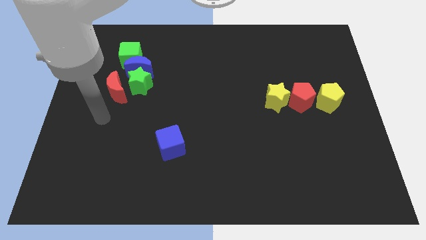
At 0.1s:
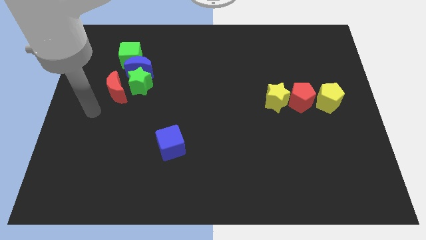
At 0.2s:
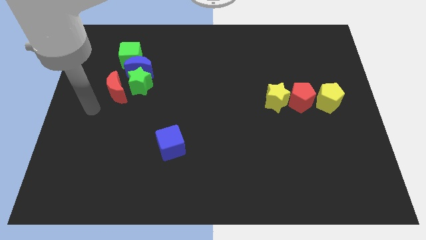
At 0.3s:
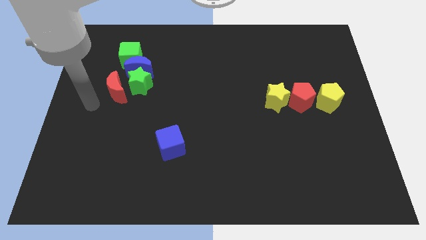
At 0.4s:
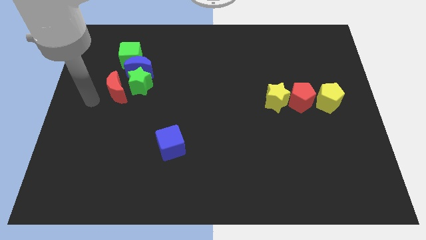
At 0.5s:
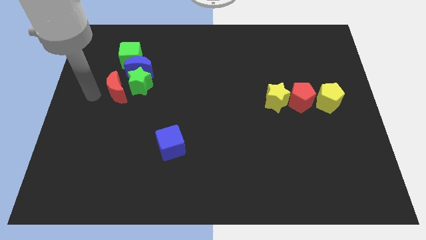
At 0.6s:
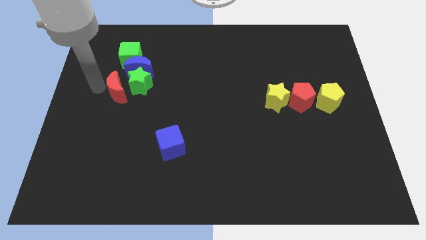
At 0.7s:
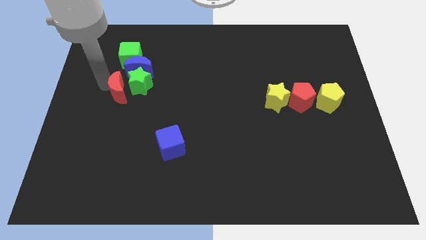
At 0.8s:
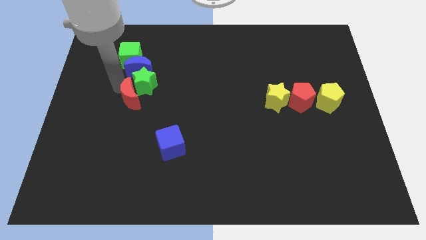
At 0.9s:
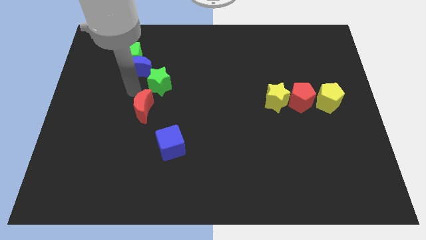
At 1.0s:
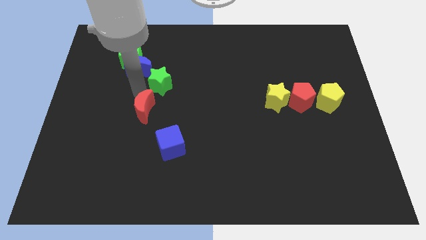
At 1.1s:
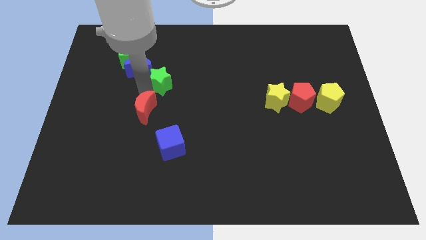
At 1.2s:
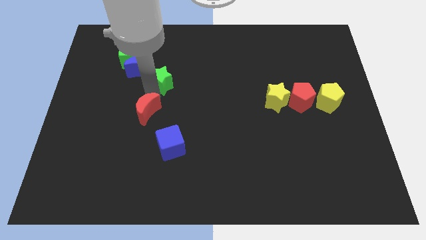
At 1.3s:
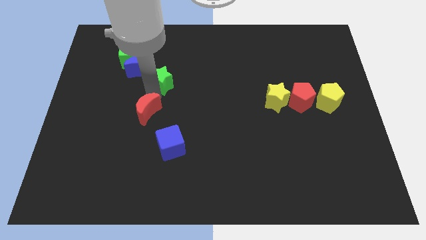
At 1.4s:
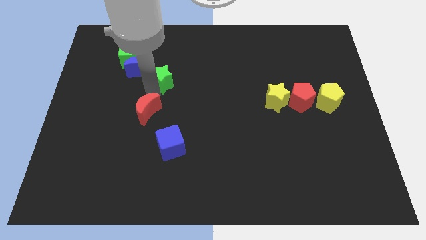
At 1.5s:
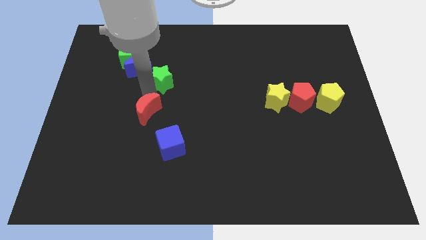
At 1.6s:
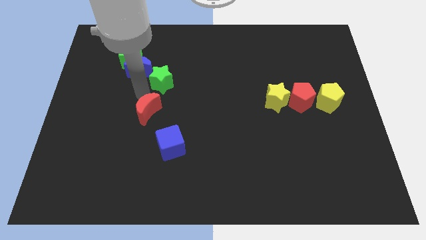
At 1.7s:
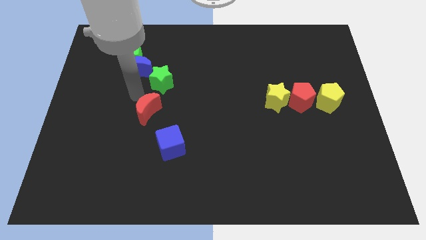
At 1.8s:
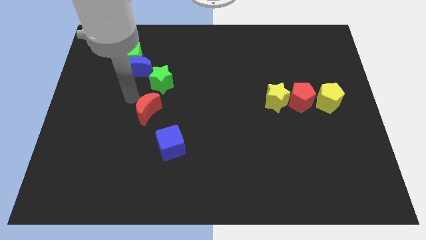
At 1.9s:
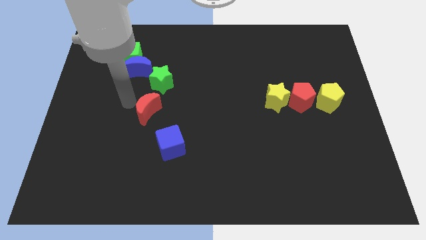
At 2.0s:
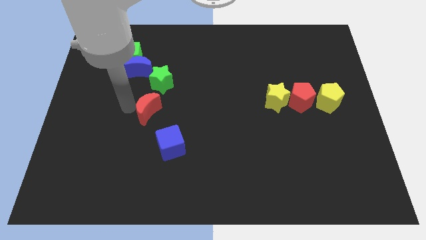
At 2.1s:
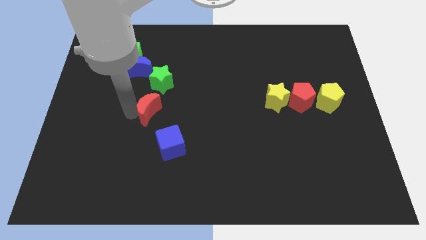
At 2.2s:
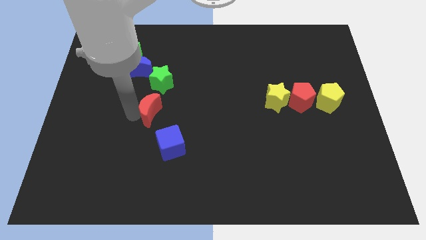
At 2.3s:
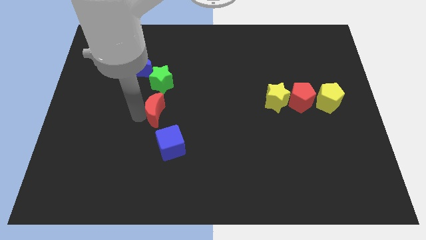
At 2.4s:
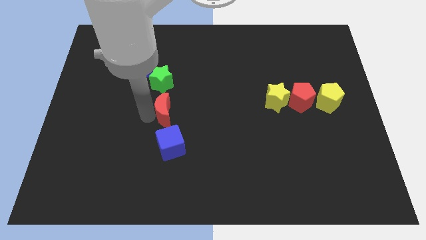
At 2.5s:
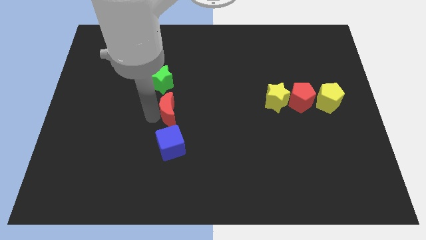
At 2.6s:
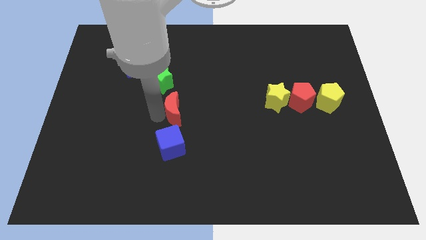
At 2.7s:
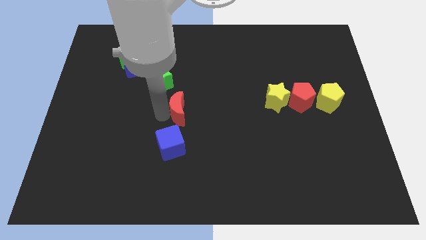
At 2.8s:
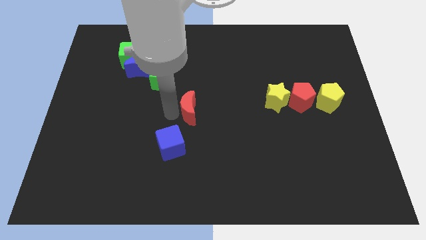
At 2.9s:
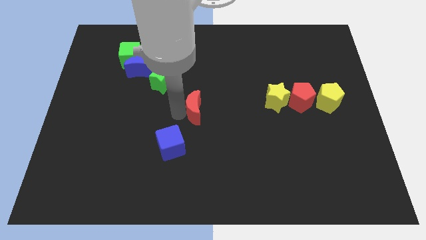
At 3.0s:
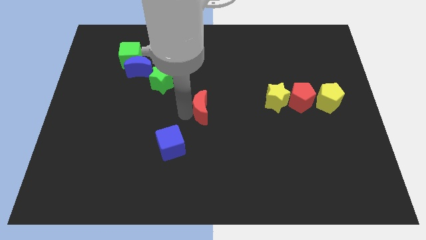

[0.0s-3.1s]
move the green star with the red moon

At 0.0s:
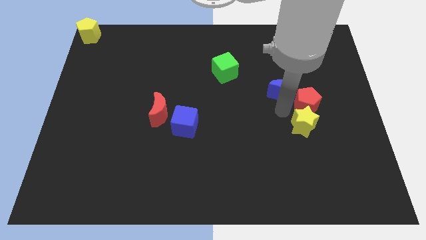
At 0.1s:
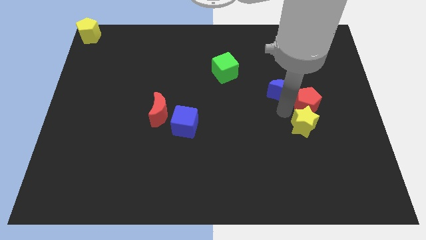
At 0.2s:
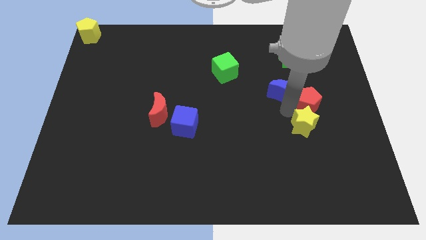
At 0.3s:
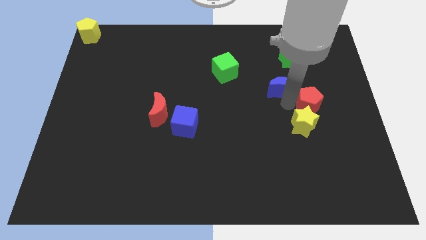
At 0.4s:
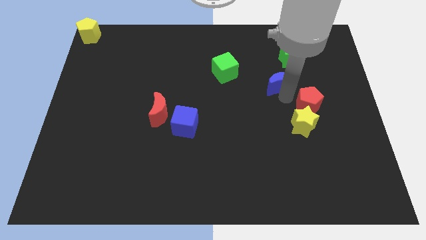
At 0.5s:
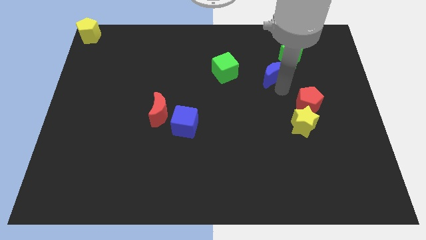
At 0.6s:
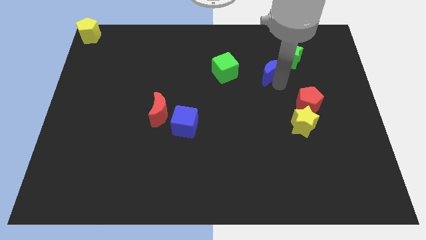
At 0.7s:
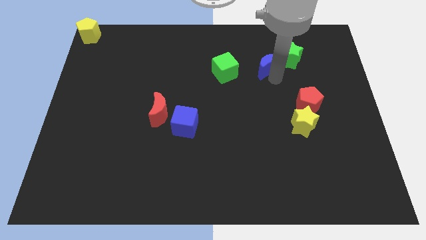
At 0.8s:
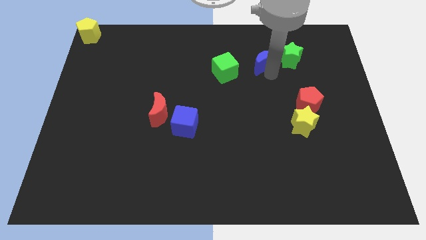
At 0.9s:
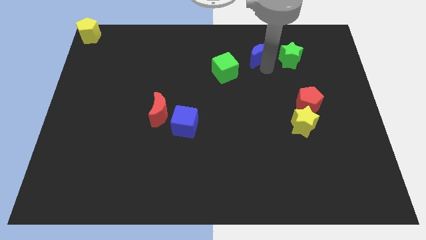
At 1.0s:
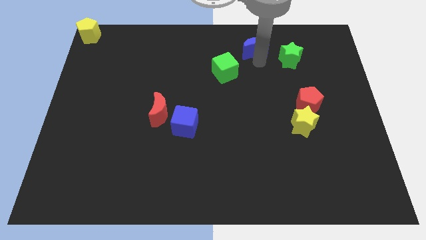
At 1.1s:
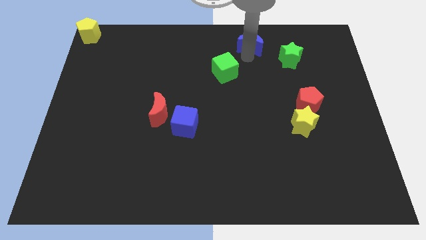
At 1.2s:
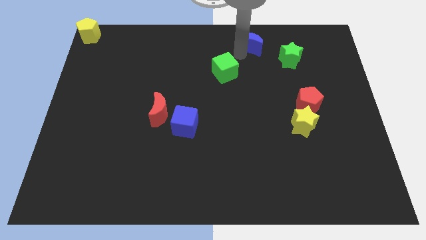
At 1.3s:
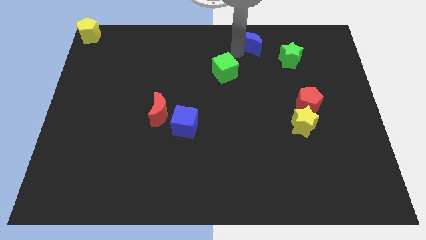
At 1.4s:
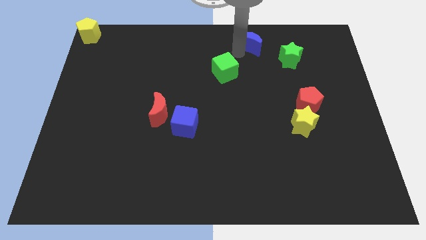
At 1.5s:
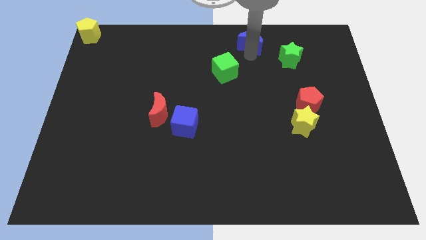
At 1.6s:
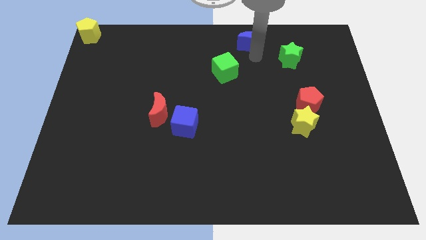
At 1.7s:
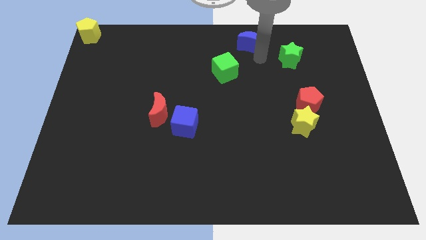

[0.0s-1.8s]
push the blue crescent towards the top center of the board

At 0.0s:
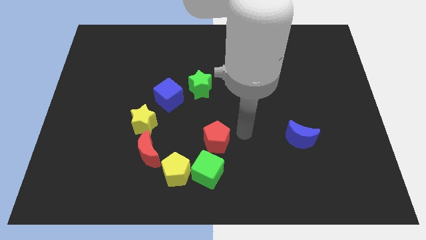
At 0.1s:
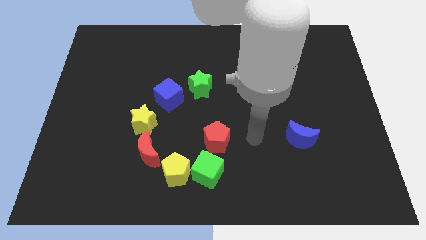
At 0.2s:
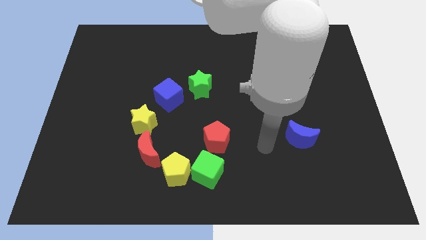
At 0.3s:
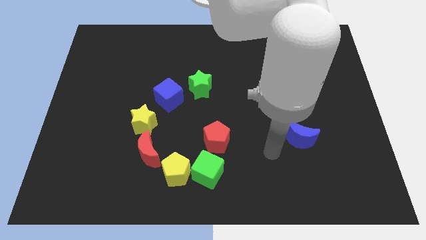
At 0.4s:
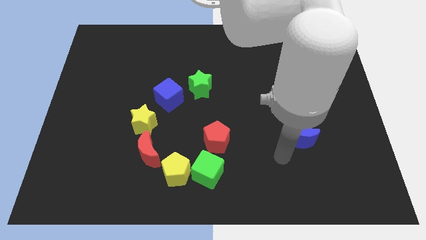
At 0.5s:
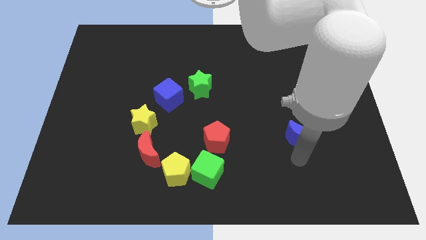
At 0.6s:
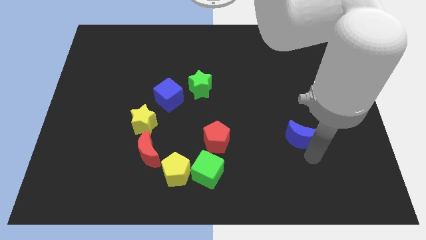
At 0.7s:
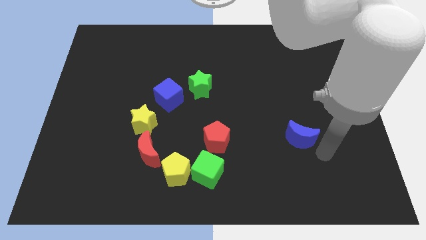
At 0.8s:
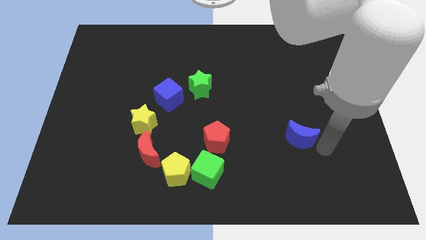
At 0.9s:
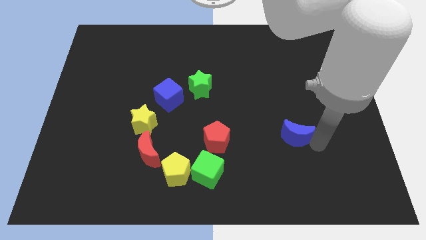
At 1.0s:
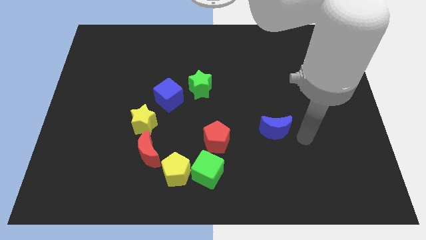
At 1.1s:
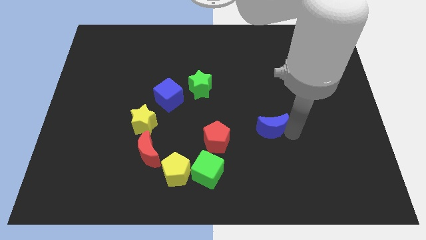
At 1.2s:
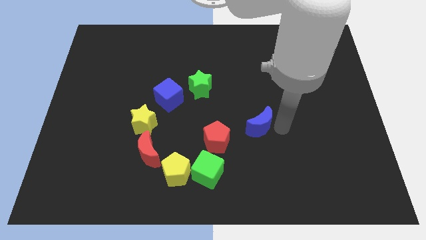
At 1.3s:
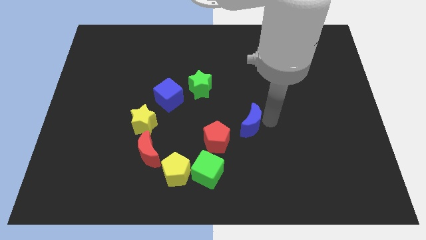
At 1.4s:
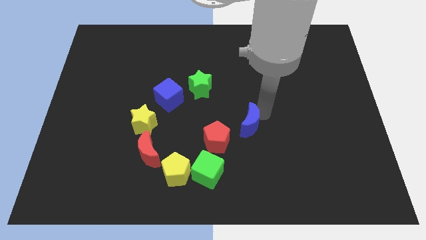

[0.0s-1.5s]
move the blue crescent towards the red pentagon

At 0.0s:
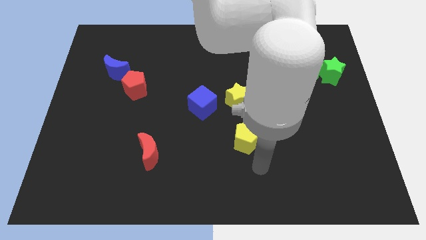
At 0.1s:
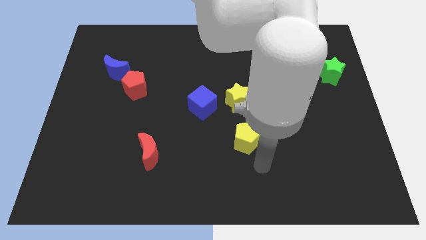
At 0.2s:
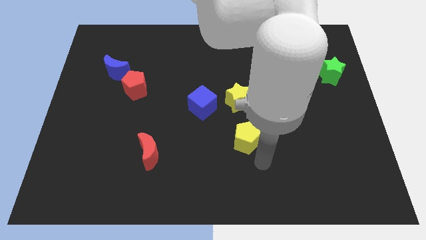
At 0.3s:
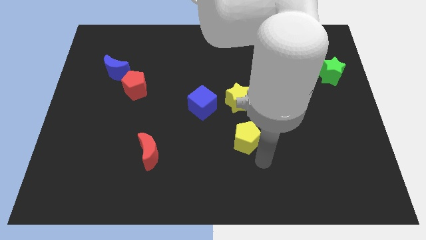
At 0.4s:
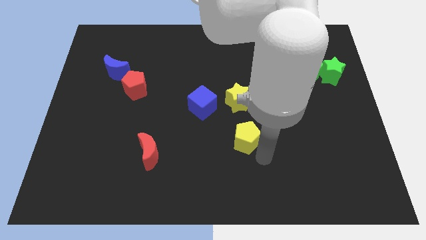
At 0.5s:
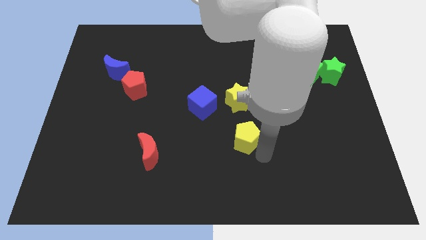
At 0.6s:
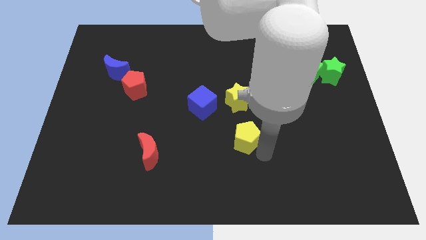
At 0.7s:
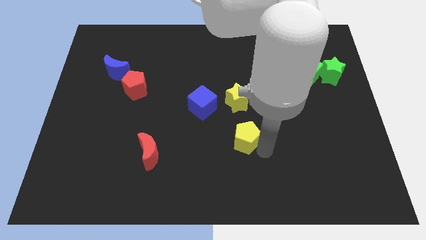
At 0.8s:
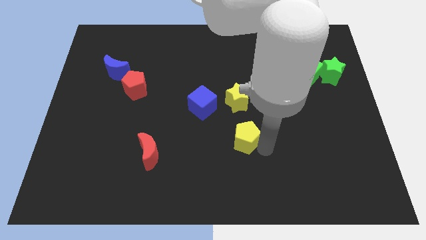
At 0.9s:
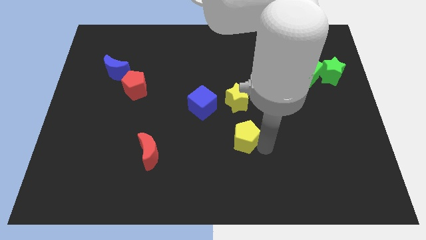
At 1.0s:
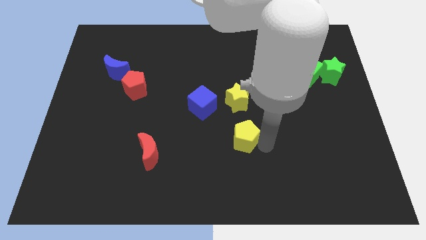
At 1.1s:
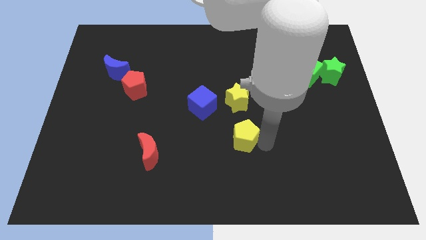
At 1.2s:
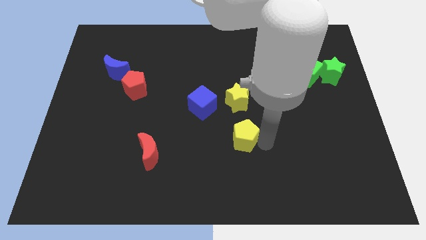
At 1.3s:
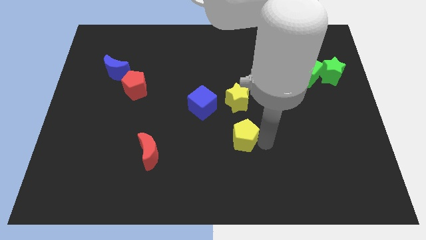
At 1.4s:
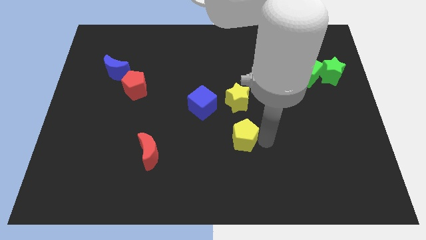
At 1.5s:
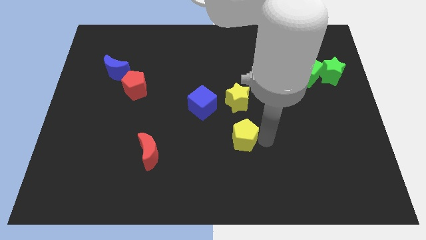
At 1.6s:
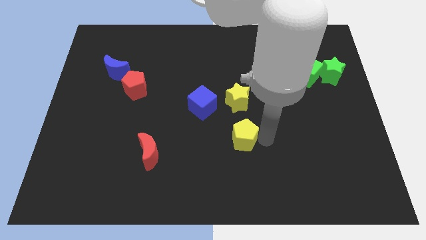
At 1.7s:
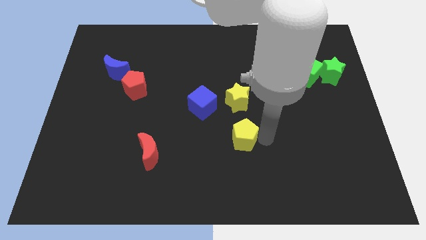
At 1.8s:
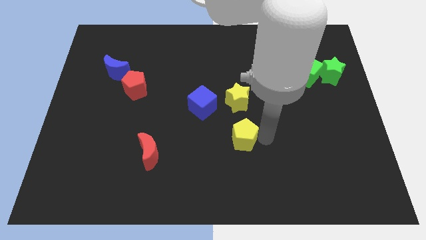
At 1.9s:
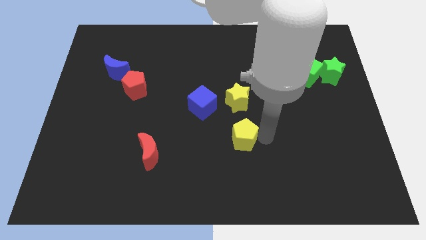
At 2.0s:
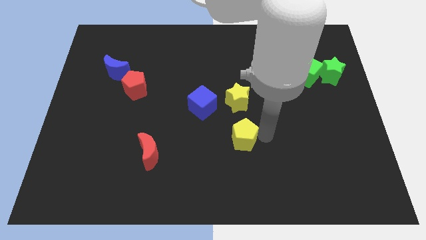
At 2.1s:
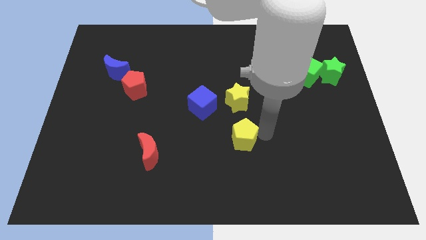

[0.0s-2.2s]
push the yellow pentagon slightly towards the top

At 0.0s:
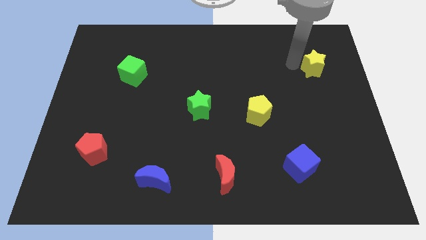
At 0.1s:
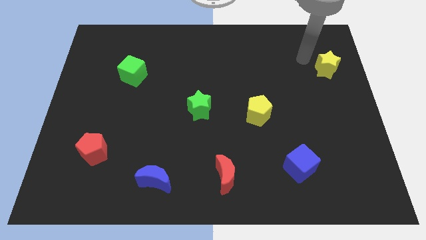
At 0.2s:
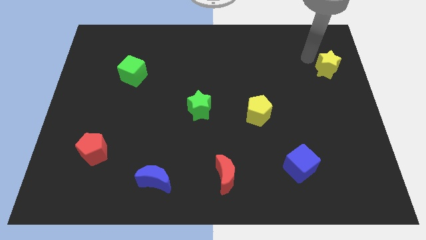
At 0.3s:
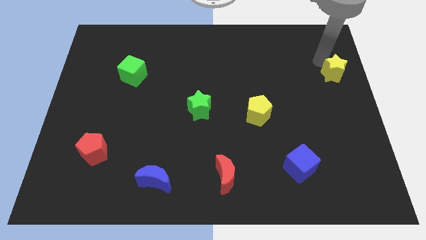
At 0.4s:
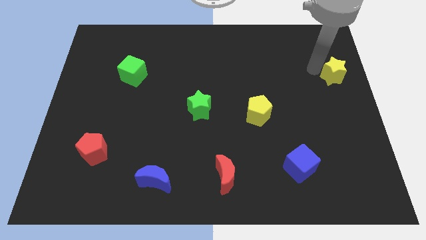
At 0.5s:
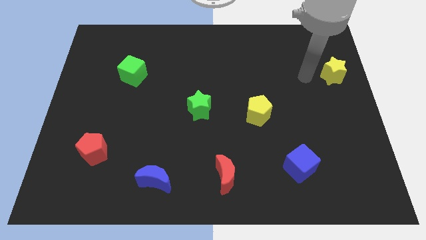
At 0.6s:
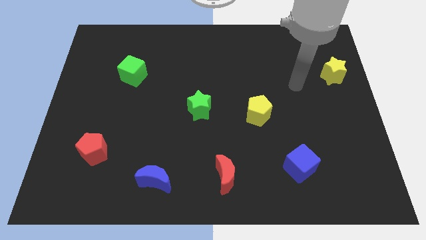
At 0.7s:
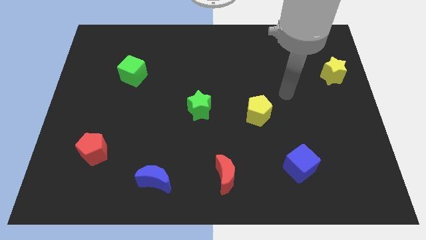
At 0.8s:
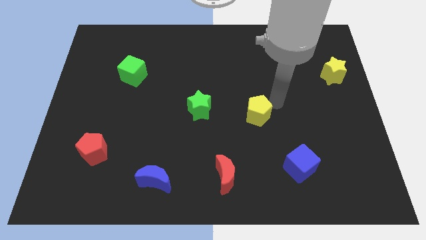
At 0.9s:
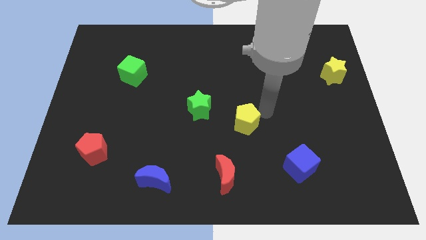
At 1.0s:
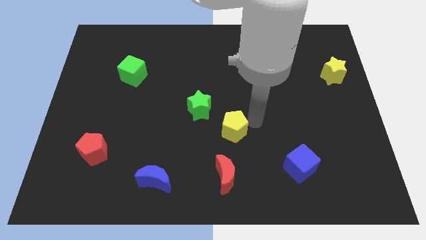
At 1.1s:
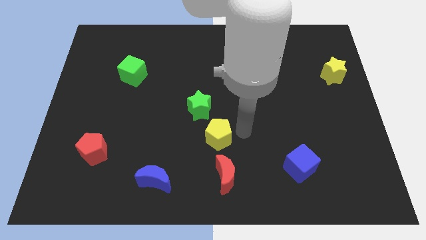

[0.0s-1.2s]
place the yellow pentagon in between the green star and red blue cube diagonally
